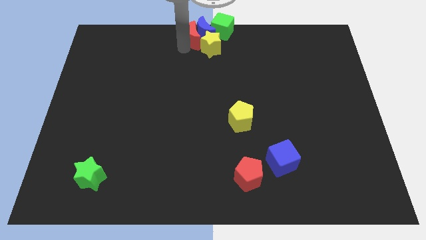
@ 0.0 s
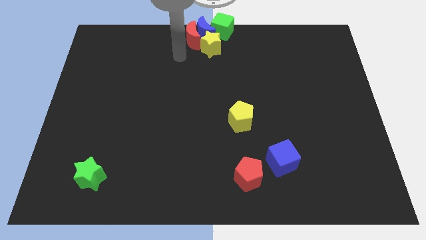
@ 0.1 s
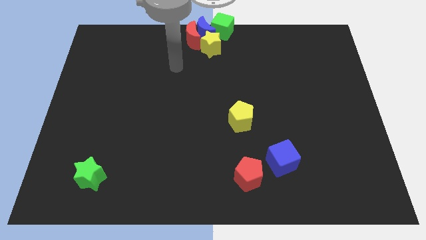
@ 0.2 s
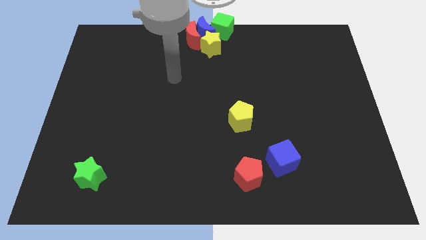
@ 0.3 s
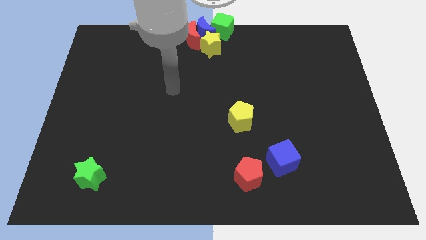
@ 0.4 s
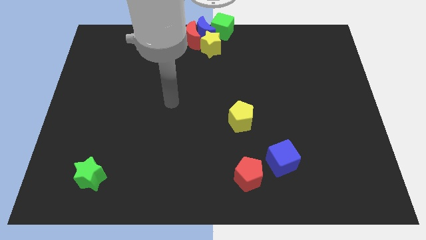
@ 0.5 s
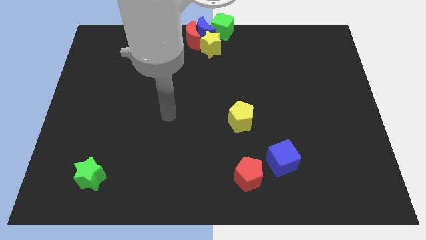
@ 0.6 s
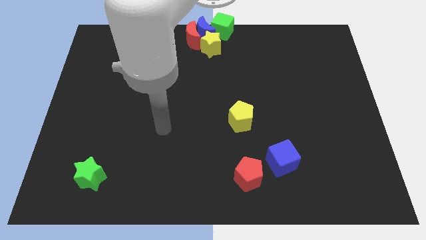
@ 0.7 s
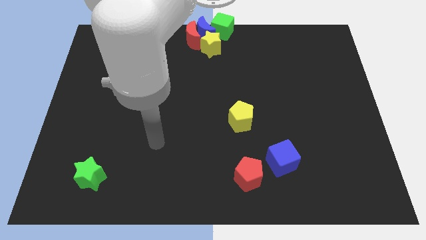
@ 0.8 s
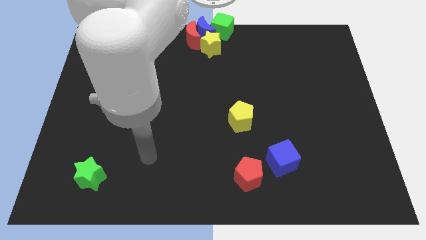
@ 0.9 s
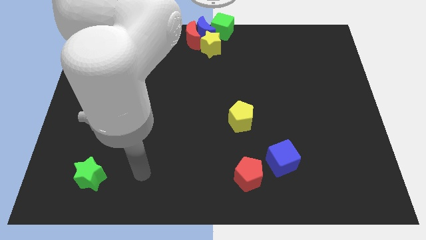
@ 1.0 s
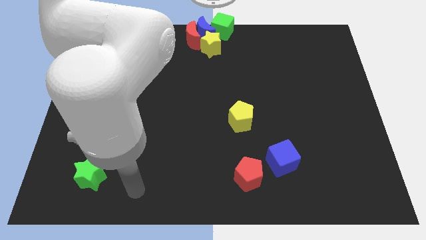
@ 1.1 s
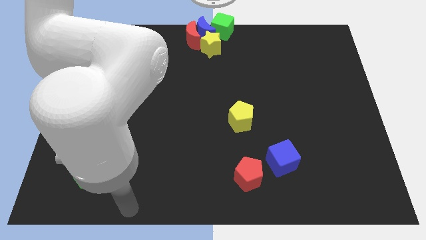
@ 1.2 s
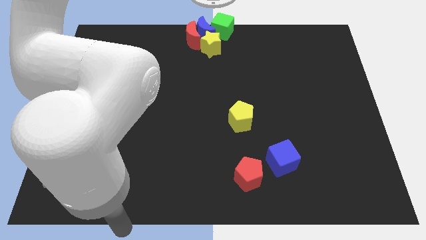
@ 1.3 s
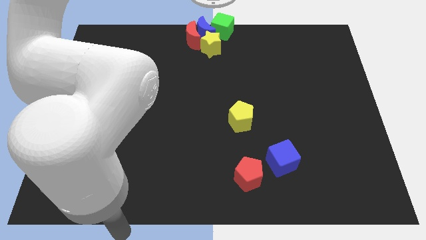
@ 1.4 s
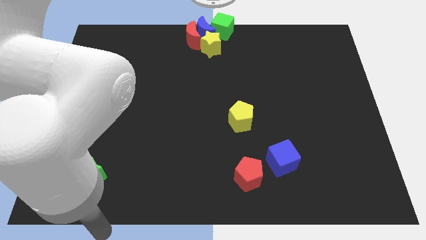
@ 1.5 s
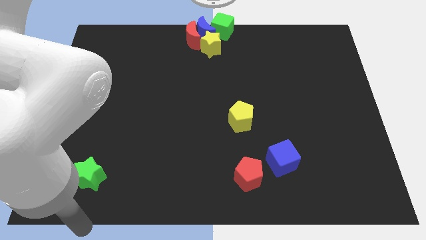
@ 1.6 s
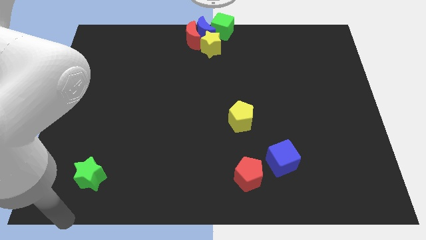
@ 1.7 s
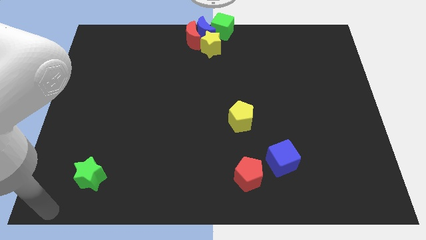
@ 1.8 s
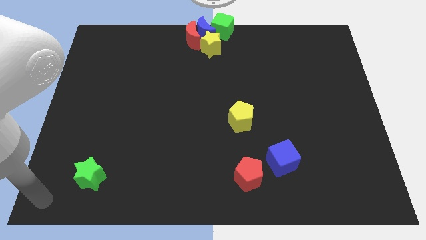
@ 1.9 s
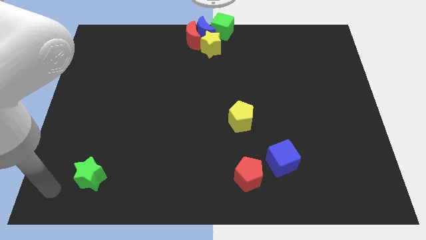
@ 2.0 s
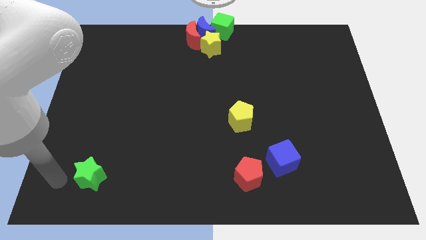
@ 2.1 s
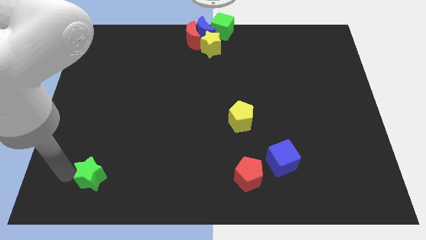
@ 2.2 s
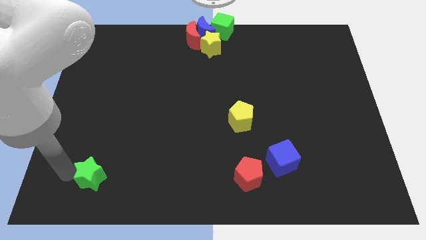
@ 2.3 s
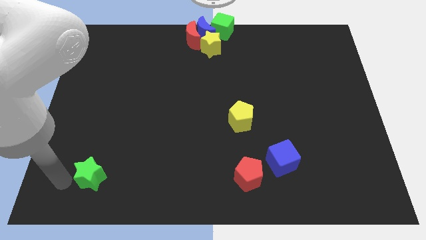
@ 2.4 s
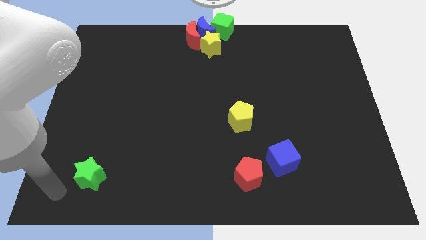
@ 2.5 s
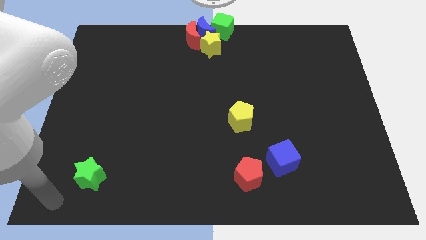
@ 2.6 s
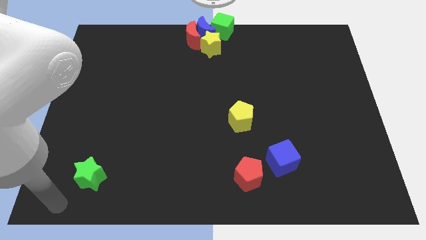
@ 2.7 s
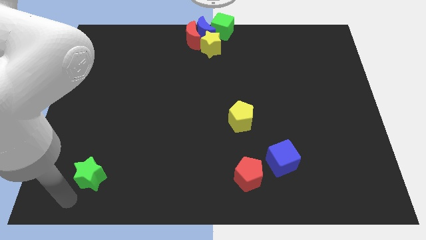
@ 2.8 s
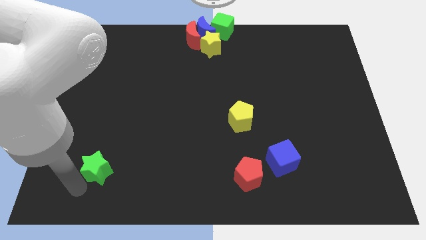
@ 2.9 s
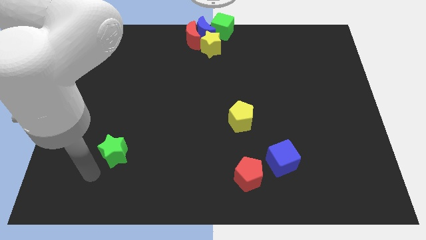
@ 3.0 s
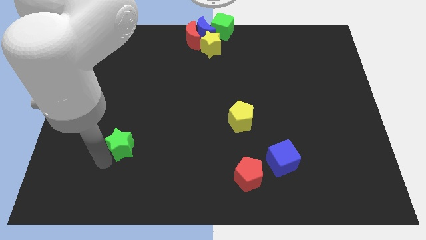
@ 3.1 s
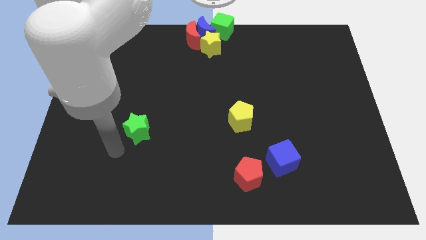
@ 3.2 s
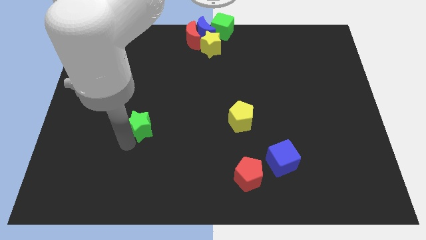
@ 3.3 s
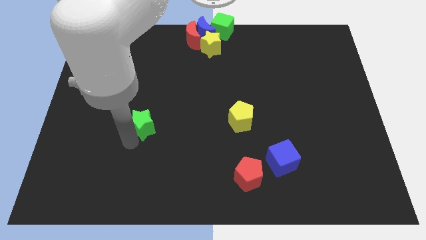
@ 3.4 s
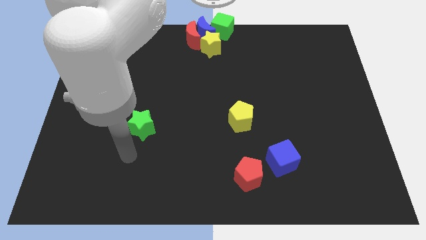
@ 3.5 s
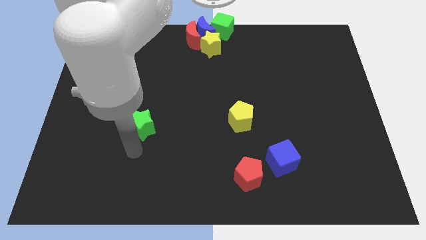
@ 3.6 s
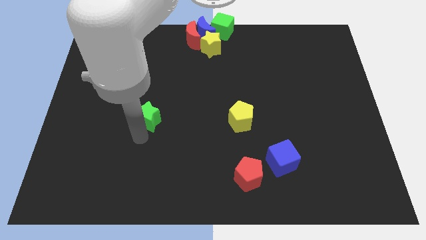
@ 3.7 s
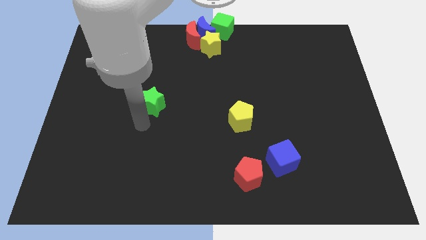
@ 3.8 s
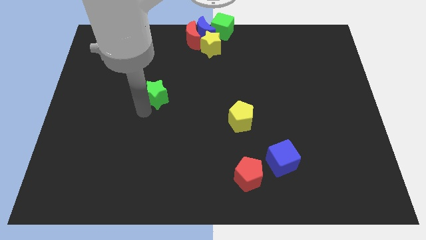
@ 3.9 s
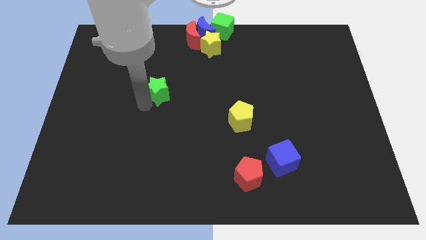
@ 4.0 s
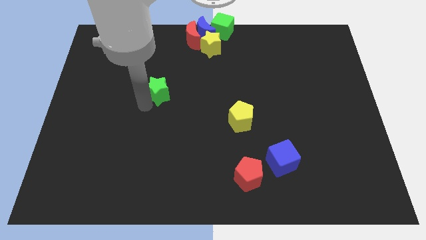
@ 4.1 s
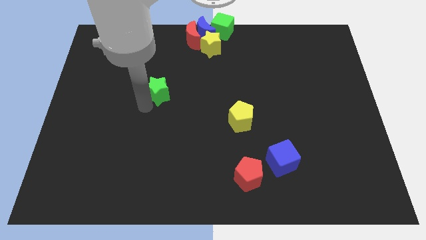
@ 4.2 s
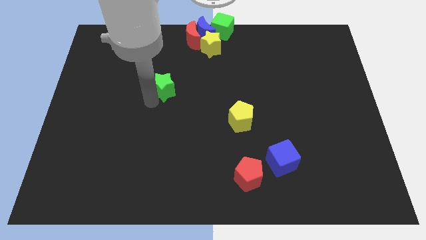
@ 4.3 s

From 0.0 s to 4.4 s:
push the green star towards the center of the board

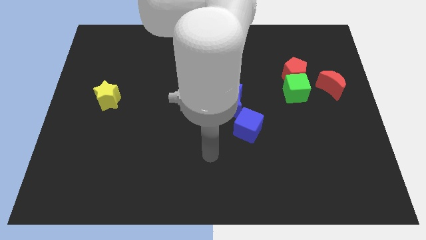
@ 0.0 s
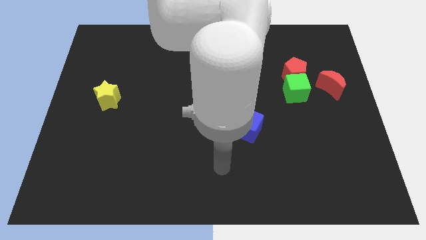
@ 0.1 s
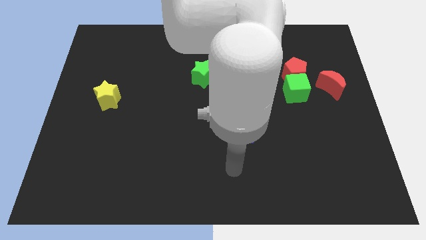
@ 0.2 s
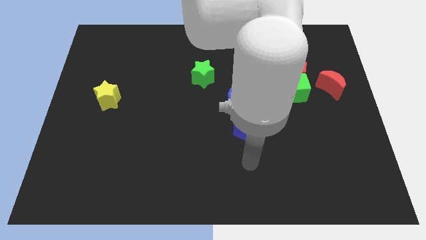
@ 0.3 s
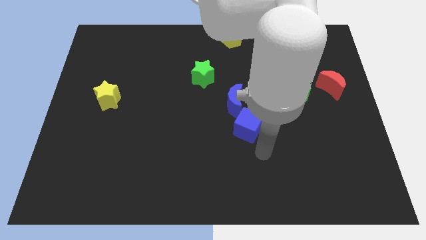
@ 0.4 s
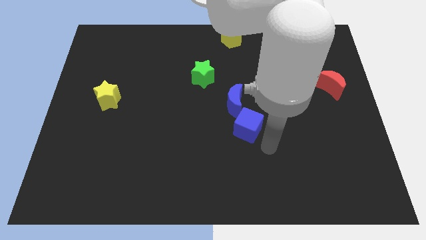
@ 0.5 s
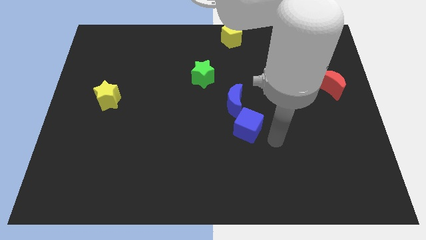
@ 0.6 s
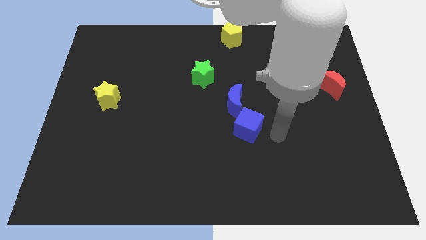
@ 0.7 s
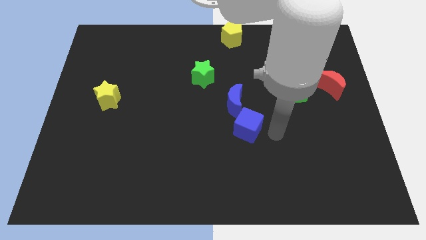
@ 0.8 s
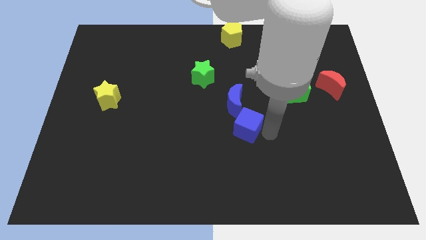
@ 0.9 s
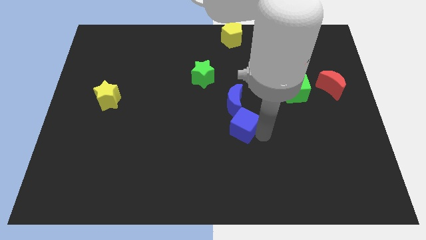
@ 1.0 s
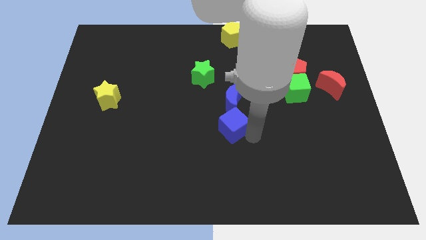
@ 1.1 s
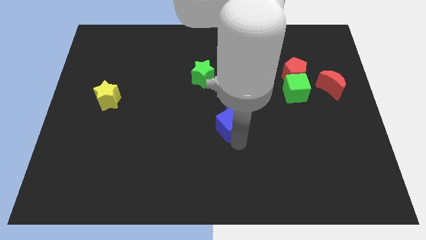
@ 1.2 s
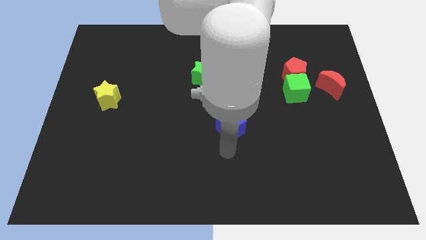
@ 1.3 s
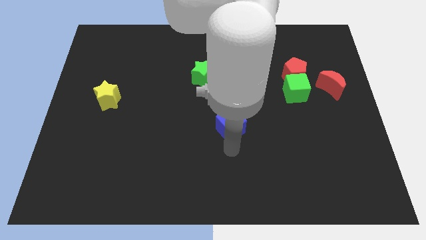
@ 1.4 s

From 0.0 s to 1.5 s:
push the blue cube slightly to the left

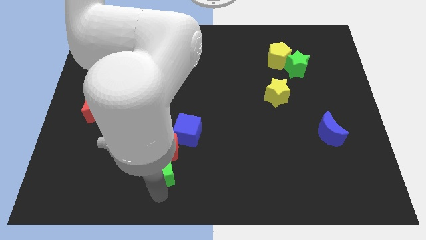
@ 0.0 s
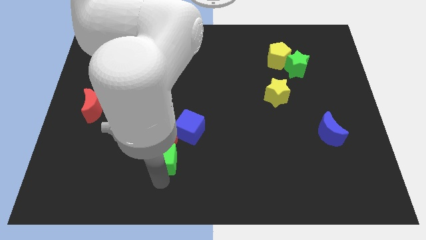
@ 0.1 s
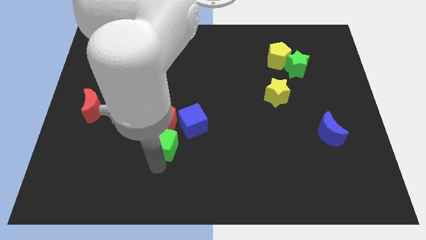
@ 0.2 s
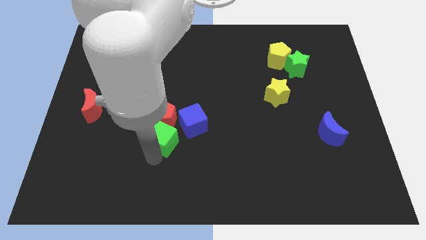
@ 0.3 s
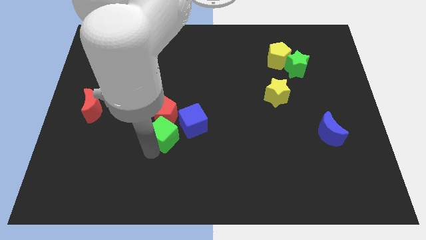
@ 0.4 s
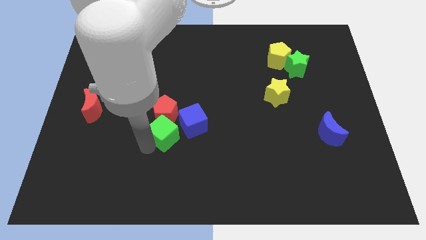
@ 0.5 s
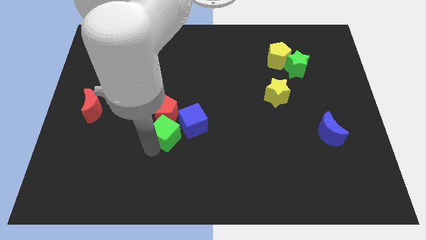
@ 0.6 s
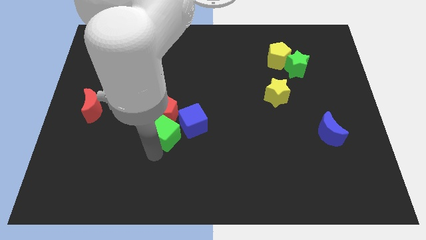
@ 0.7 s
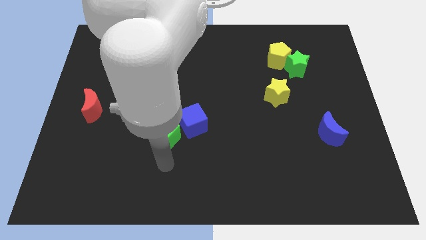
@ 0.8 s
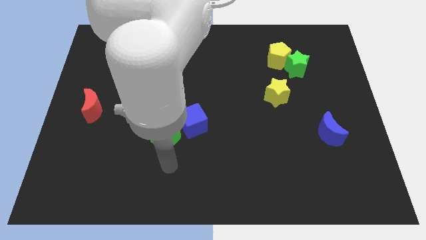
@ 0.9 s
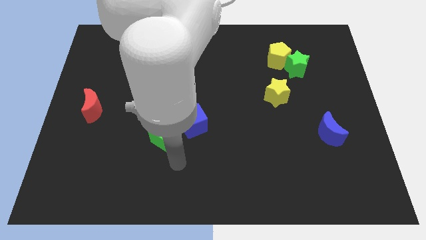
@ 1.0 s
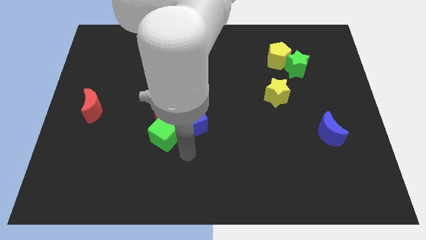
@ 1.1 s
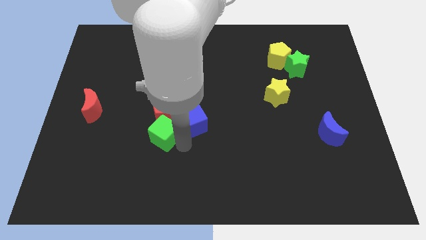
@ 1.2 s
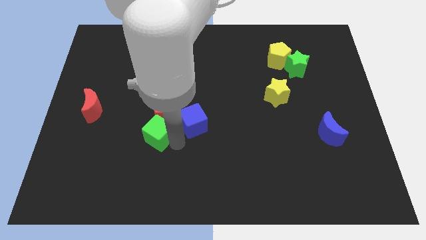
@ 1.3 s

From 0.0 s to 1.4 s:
slightly push the green cube and red pentagon towards up

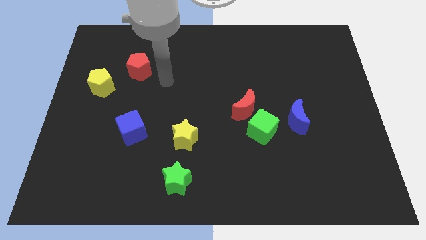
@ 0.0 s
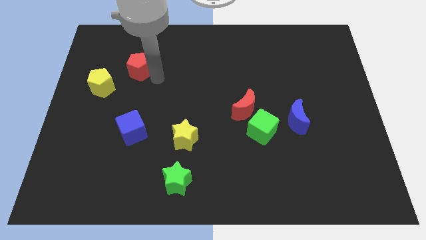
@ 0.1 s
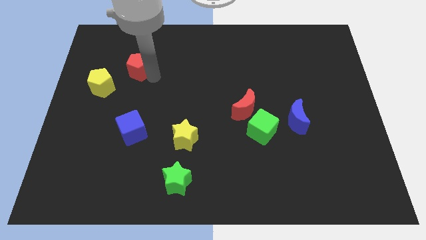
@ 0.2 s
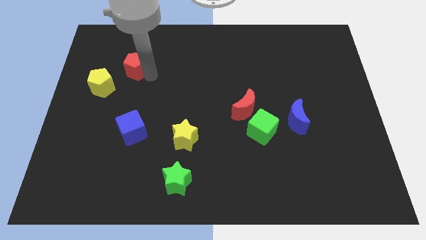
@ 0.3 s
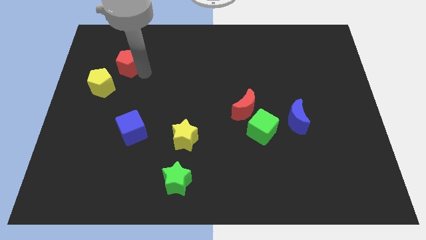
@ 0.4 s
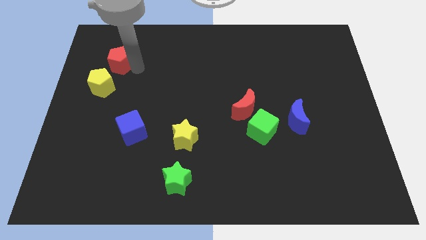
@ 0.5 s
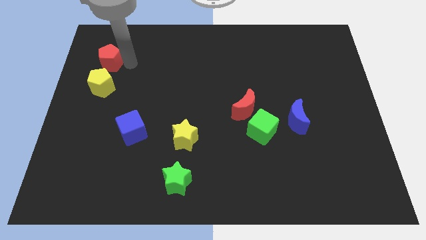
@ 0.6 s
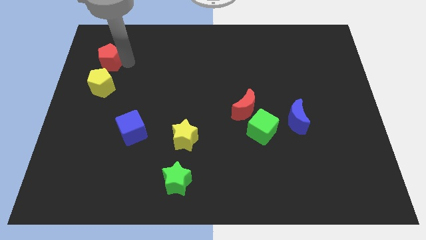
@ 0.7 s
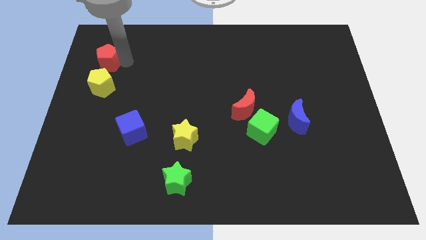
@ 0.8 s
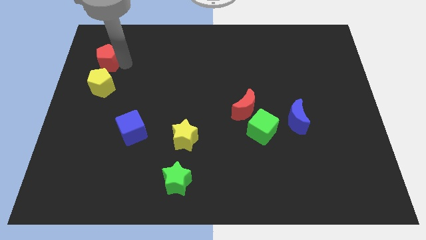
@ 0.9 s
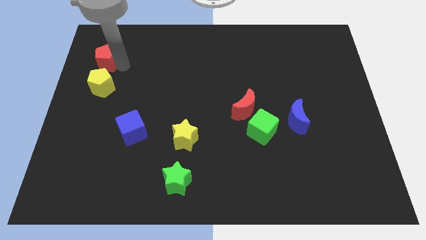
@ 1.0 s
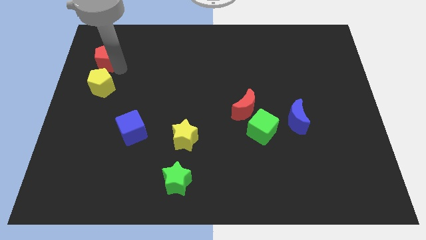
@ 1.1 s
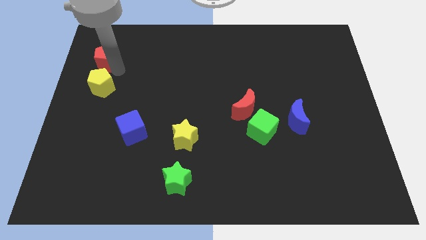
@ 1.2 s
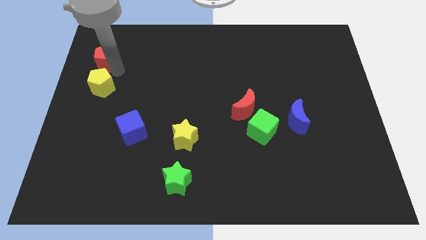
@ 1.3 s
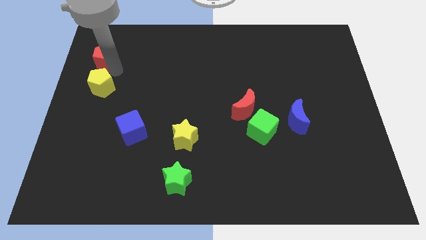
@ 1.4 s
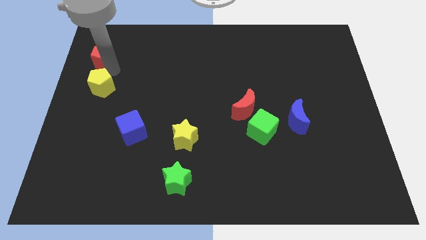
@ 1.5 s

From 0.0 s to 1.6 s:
place the red pentagon above the yellow pentagon
